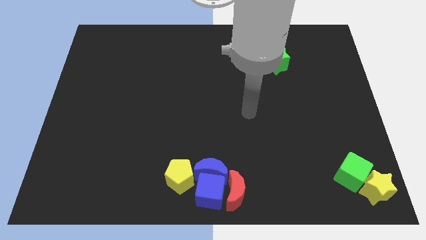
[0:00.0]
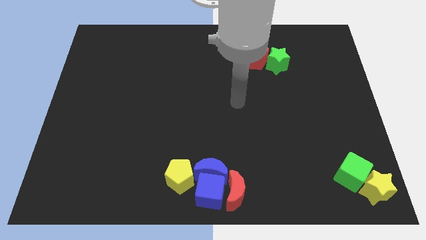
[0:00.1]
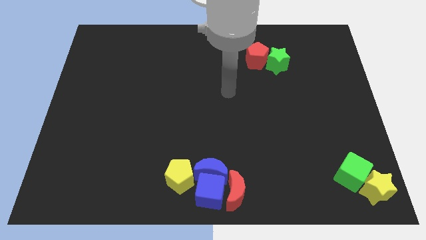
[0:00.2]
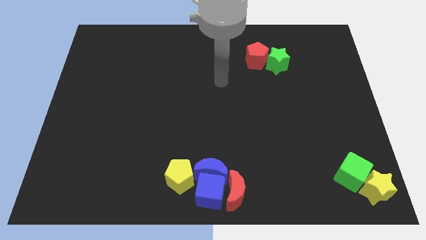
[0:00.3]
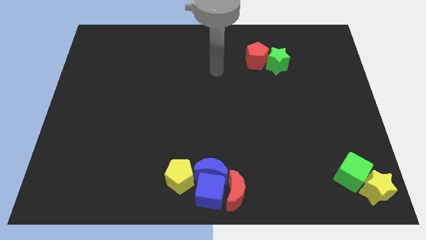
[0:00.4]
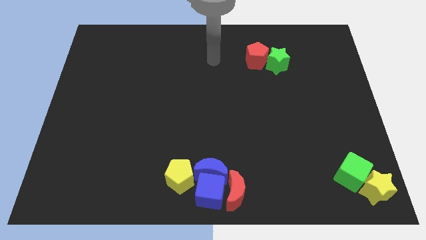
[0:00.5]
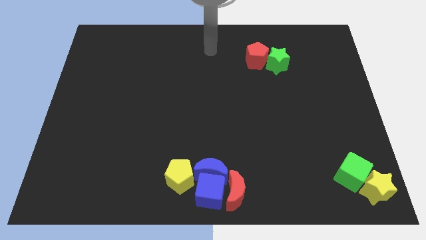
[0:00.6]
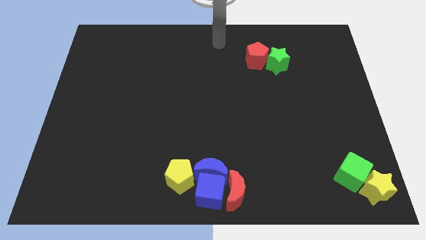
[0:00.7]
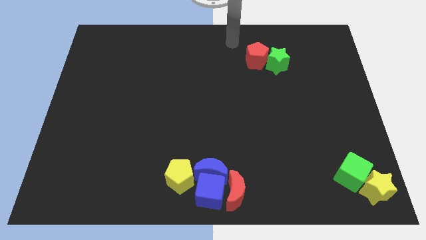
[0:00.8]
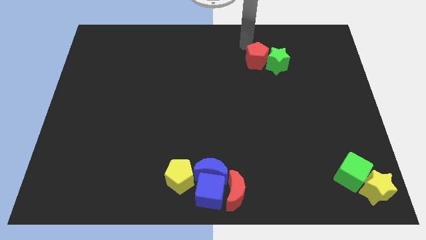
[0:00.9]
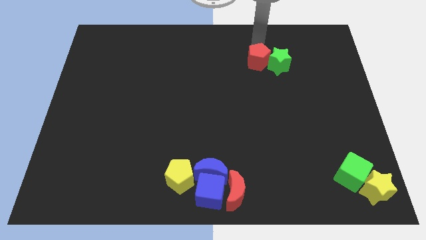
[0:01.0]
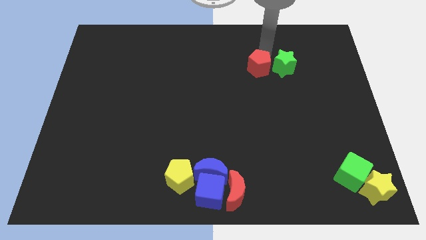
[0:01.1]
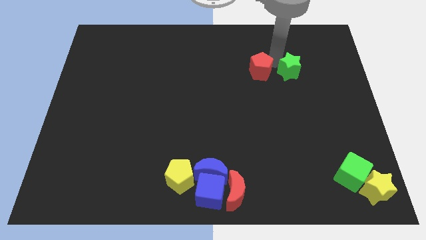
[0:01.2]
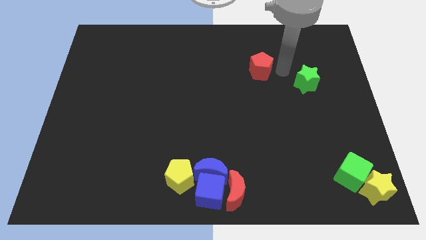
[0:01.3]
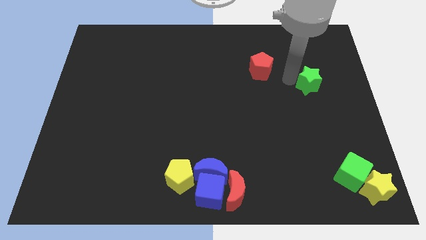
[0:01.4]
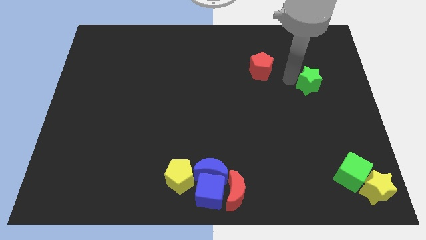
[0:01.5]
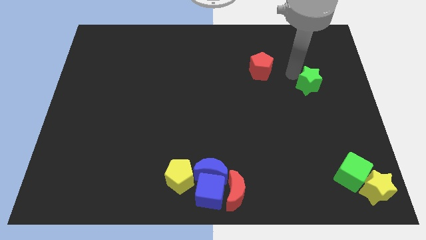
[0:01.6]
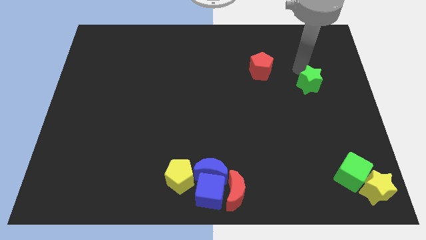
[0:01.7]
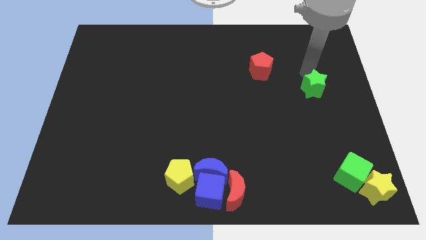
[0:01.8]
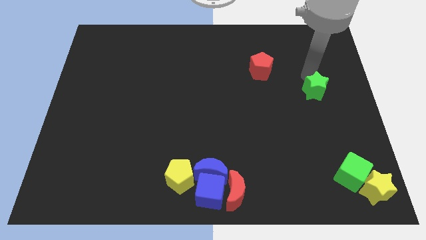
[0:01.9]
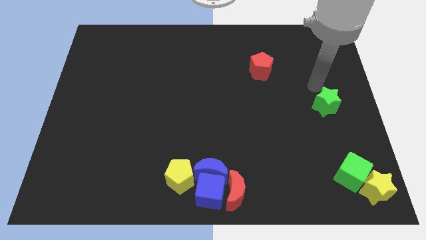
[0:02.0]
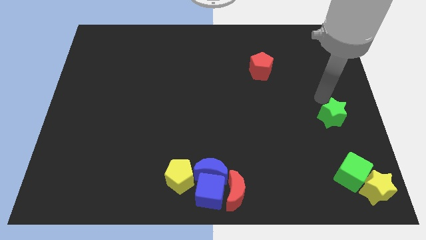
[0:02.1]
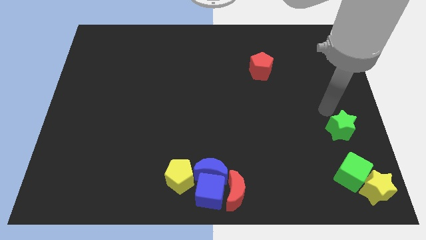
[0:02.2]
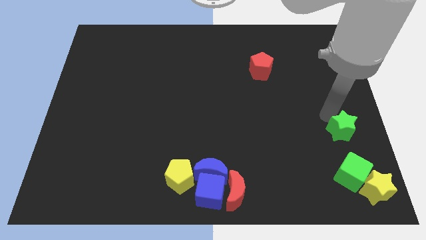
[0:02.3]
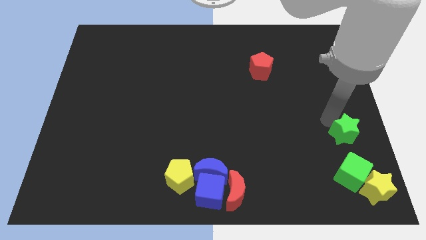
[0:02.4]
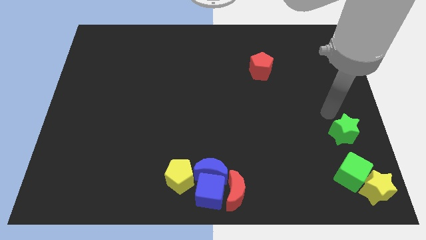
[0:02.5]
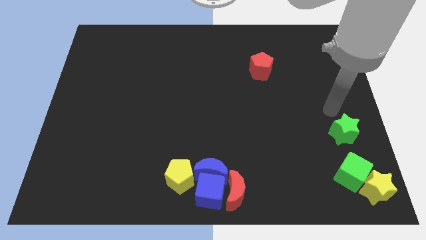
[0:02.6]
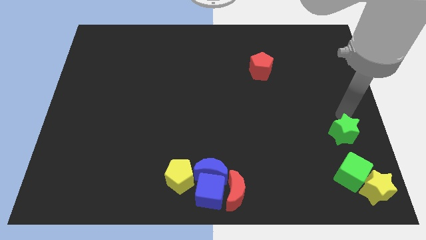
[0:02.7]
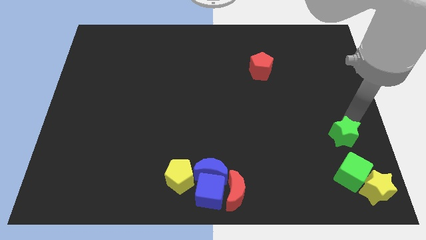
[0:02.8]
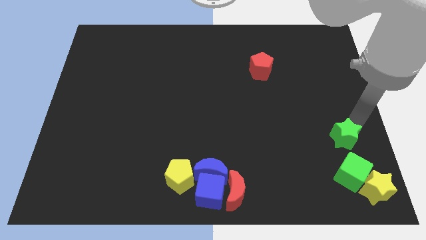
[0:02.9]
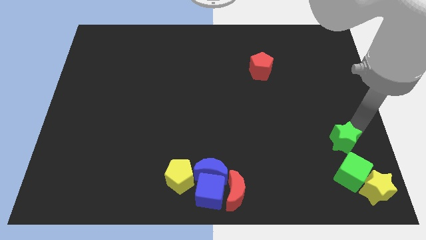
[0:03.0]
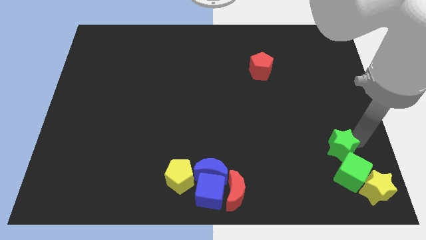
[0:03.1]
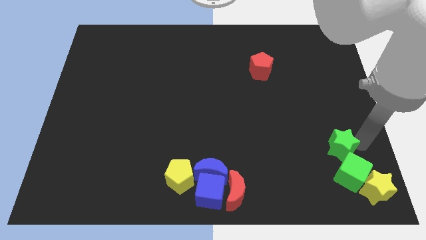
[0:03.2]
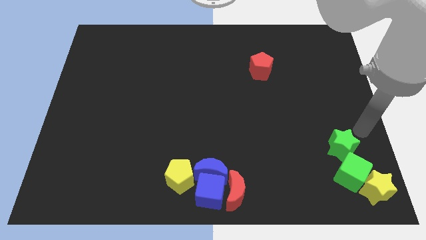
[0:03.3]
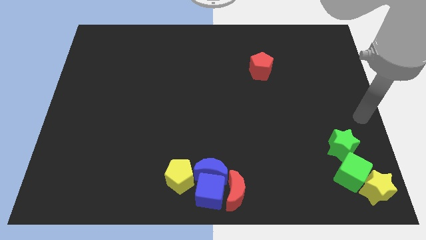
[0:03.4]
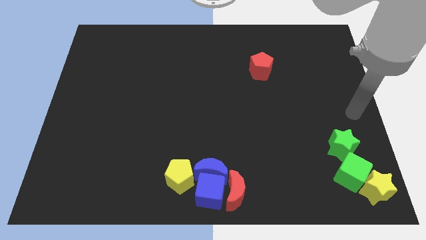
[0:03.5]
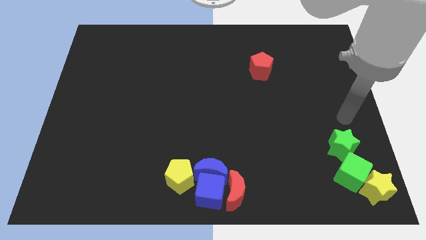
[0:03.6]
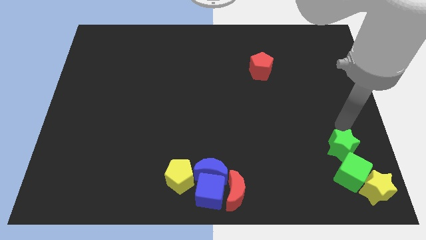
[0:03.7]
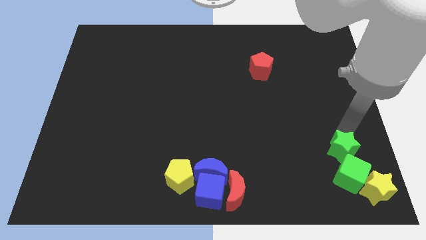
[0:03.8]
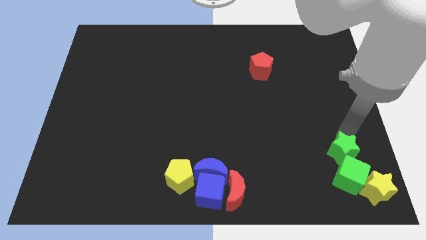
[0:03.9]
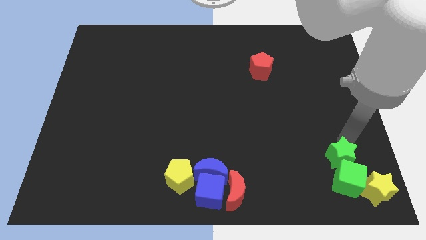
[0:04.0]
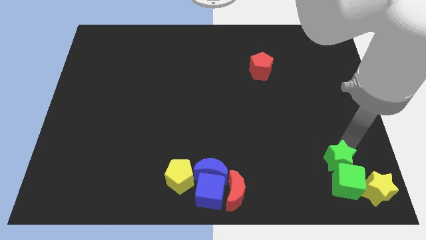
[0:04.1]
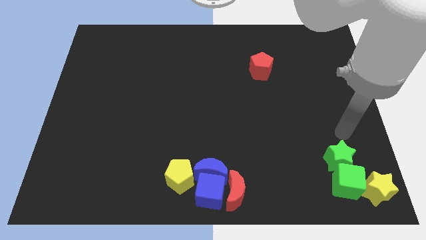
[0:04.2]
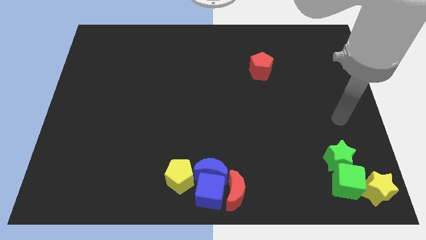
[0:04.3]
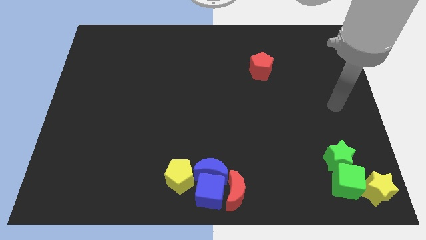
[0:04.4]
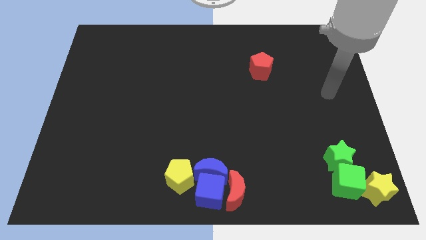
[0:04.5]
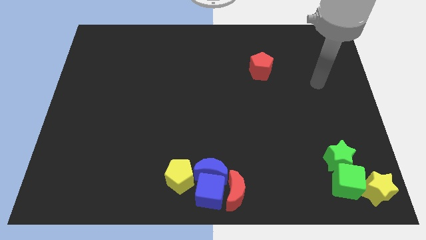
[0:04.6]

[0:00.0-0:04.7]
push the green star into the green cube

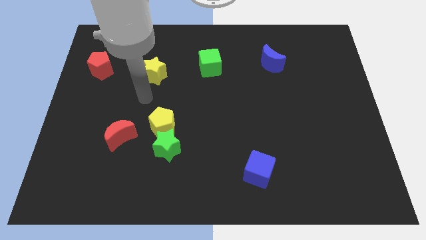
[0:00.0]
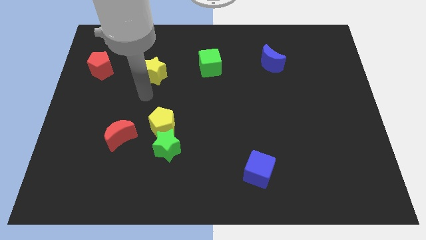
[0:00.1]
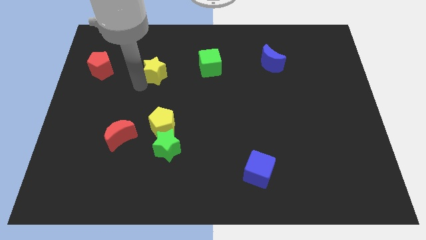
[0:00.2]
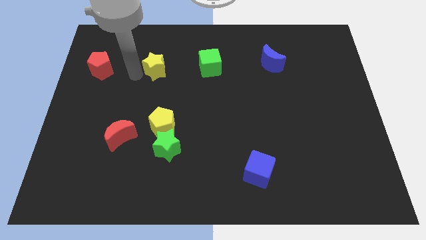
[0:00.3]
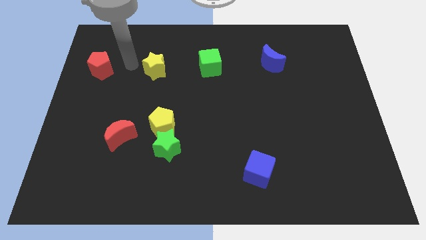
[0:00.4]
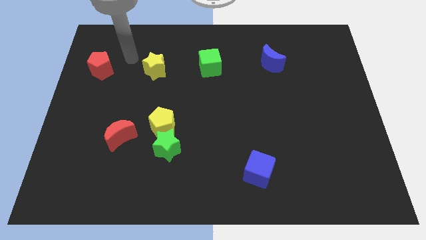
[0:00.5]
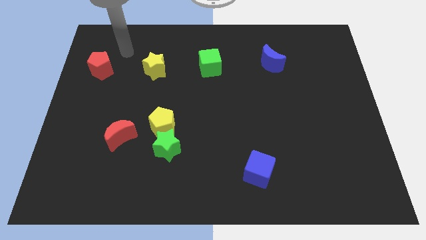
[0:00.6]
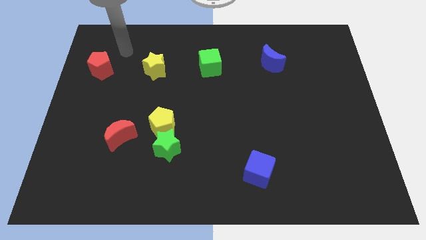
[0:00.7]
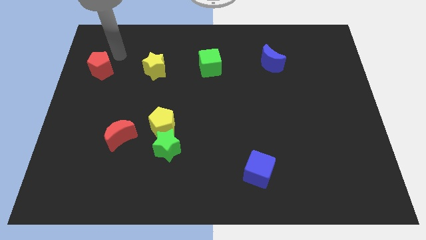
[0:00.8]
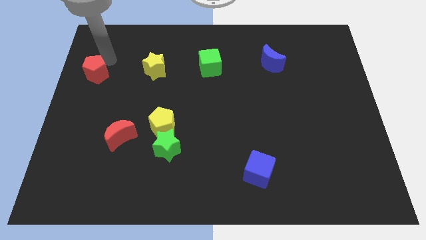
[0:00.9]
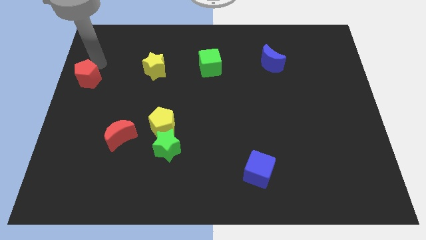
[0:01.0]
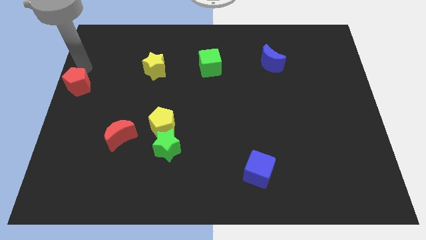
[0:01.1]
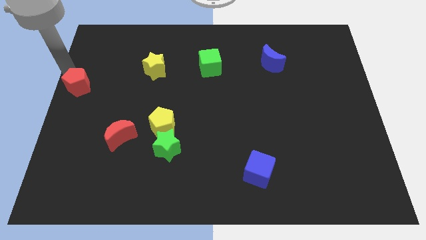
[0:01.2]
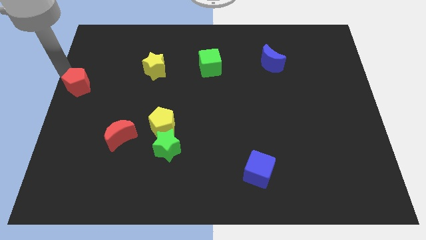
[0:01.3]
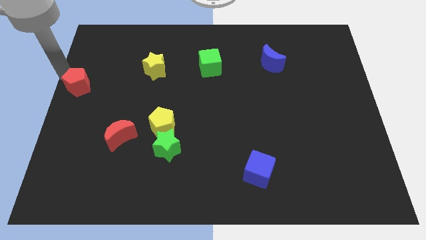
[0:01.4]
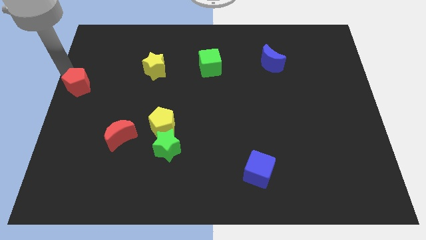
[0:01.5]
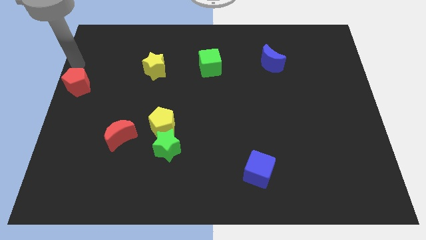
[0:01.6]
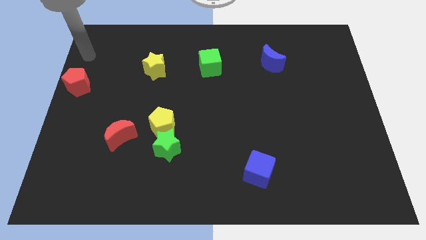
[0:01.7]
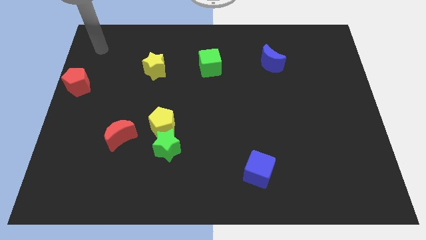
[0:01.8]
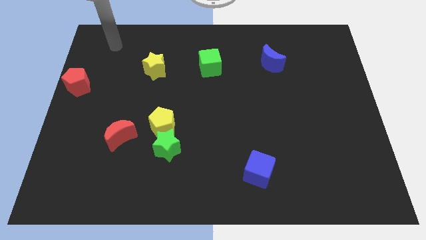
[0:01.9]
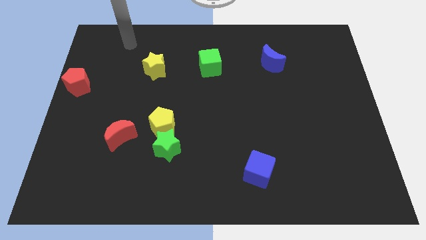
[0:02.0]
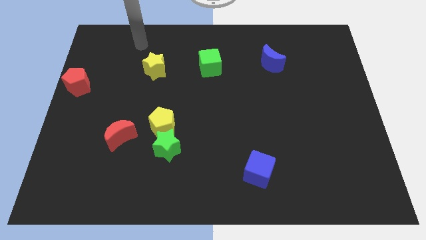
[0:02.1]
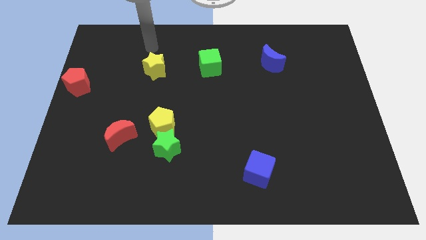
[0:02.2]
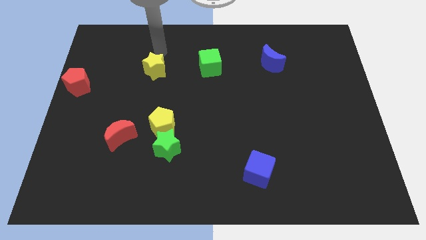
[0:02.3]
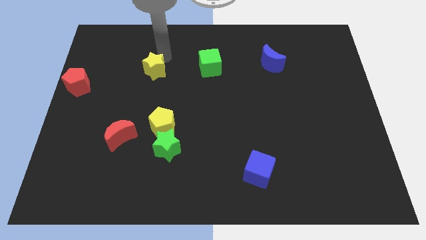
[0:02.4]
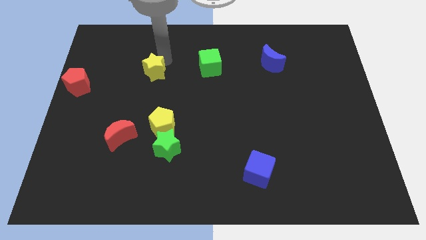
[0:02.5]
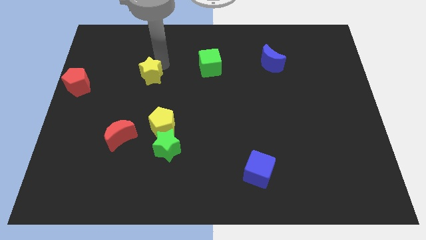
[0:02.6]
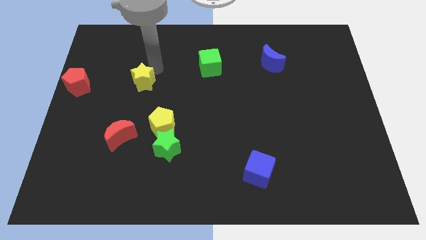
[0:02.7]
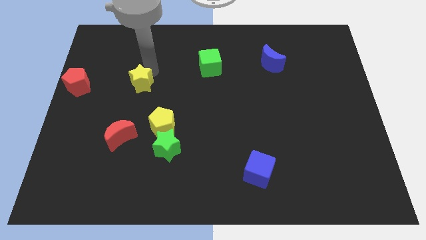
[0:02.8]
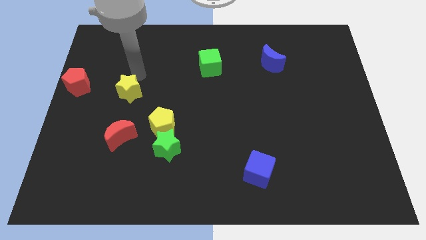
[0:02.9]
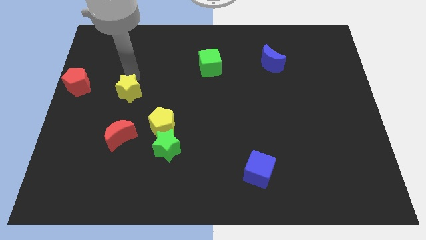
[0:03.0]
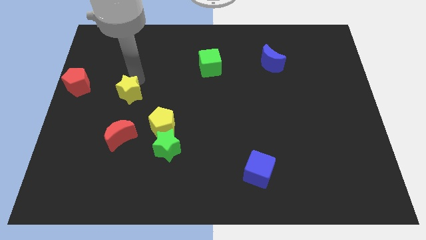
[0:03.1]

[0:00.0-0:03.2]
place the red pentagon to the left side of the board

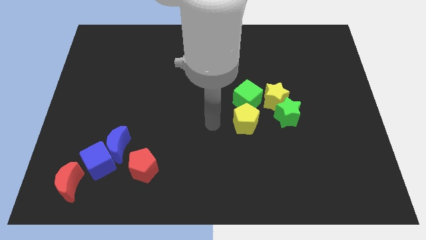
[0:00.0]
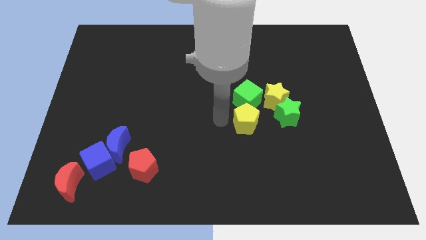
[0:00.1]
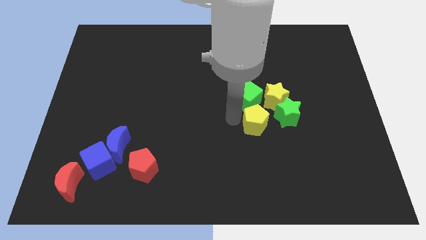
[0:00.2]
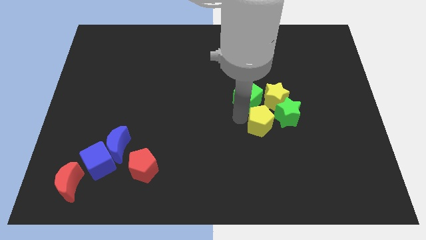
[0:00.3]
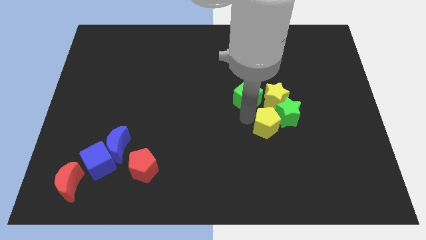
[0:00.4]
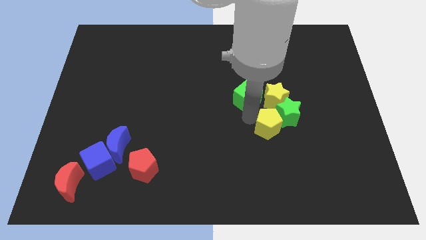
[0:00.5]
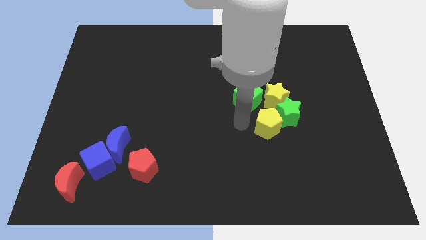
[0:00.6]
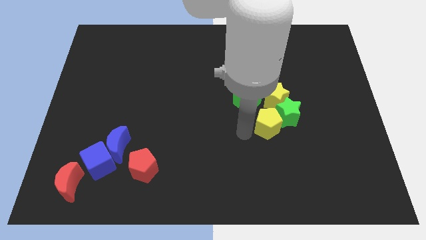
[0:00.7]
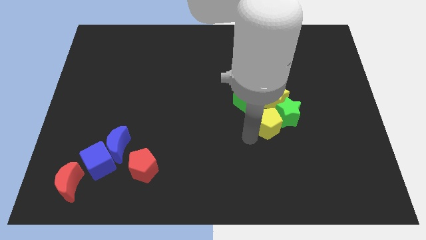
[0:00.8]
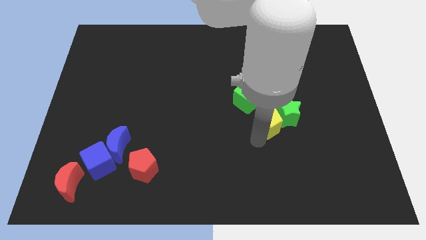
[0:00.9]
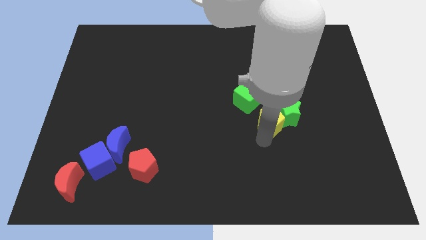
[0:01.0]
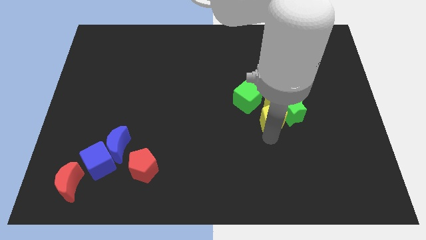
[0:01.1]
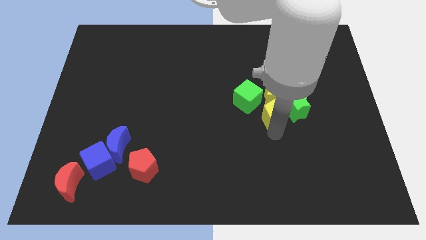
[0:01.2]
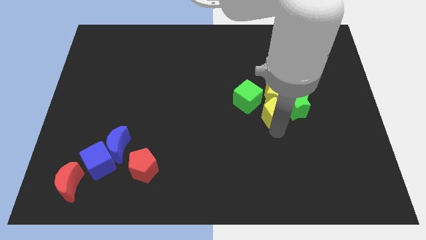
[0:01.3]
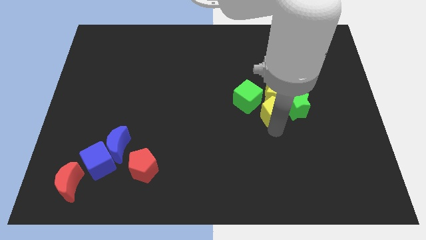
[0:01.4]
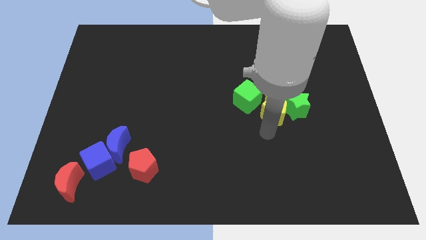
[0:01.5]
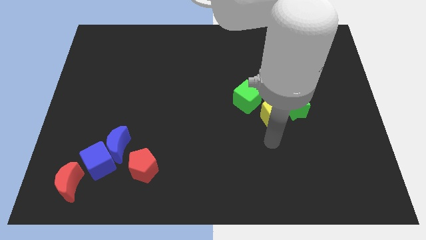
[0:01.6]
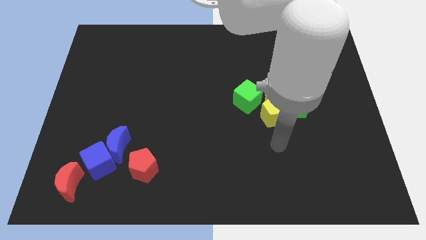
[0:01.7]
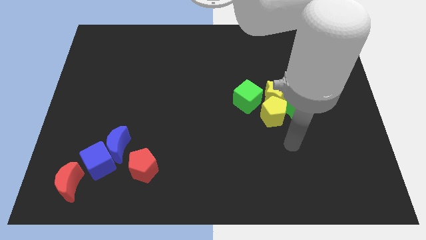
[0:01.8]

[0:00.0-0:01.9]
adjust the yellow pentagon into the group of yellow and green blocks
